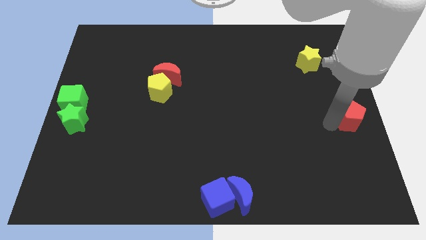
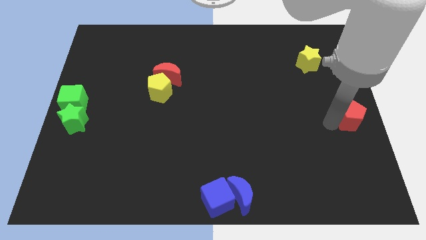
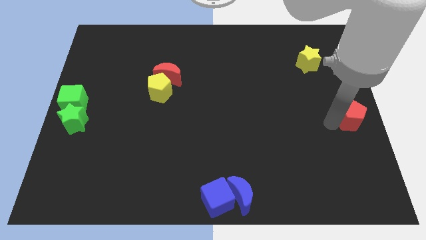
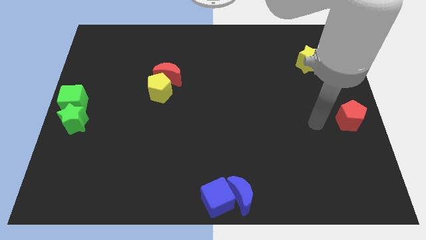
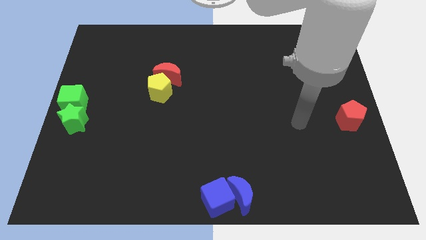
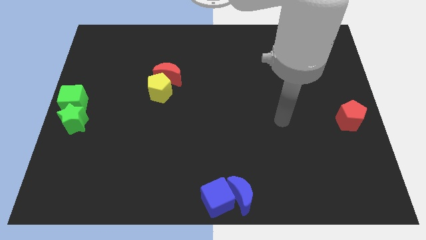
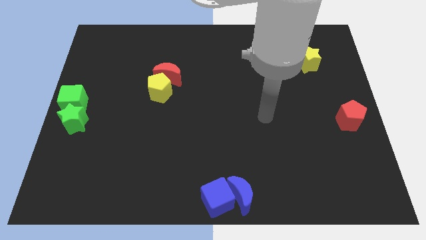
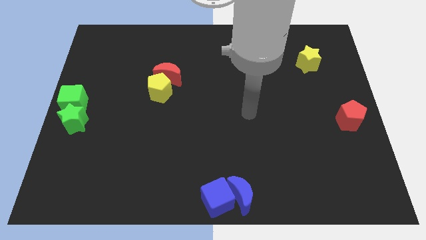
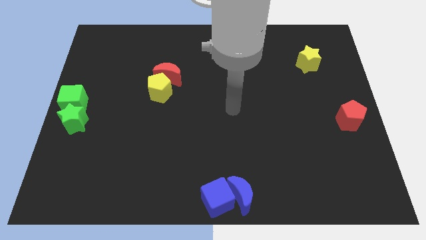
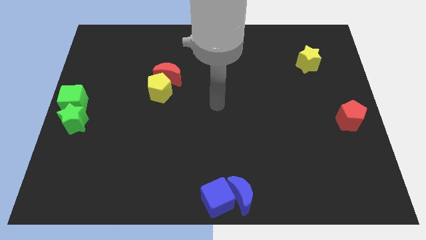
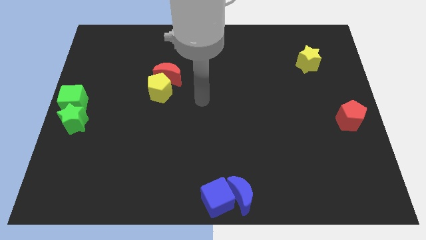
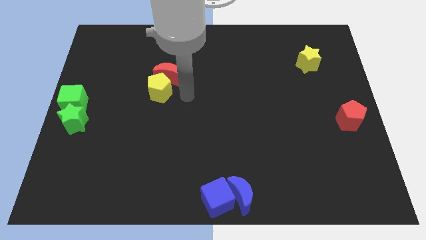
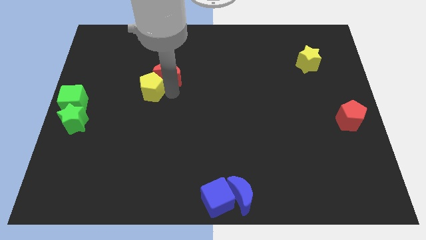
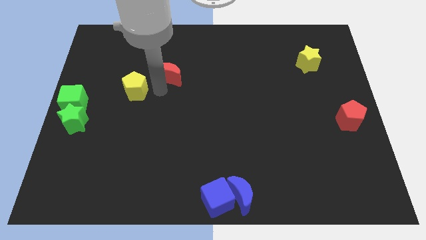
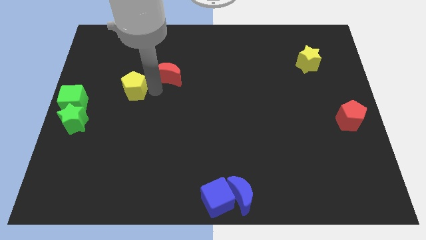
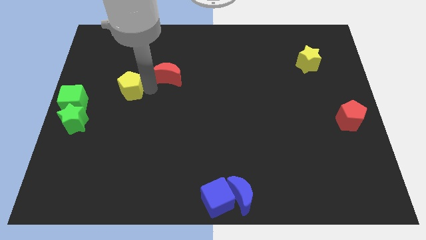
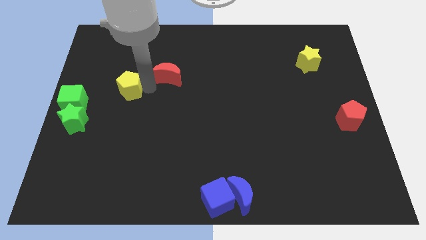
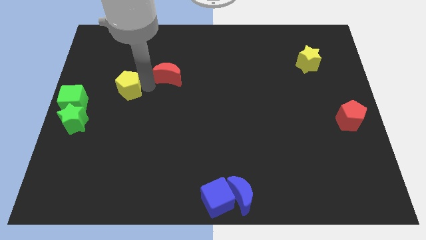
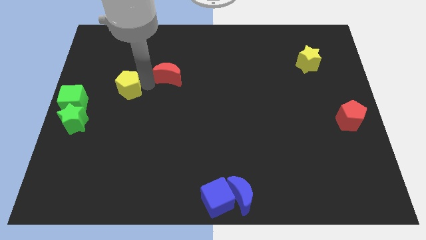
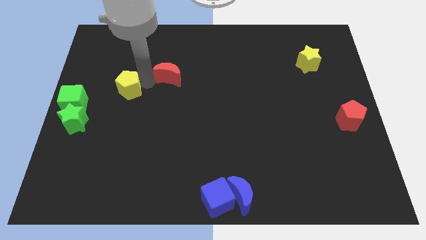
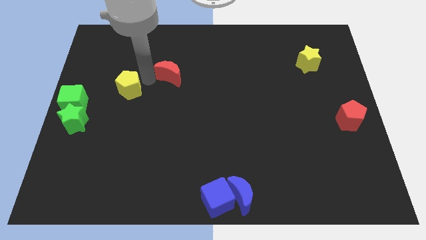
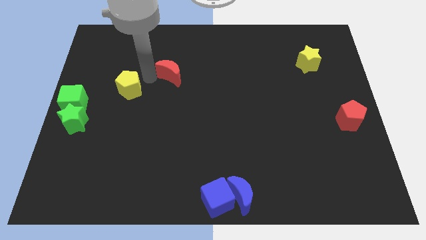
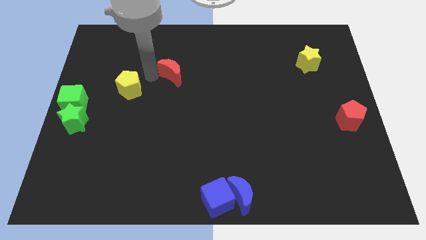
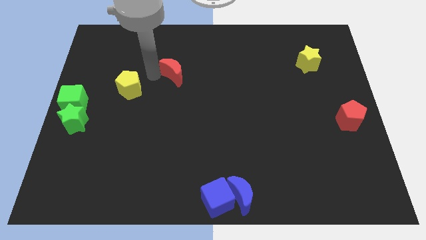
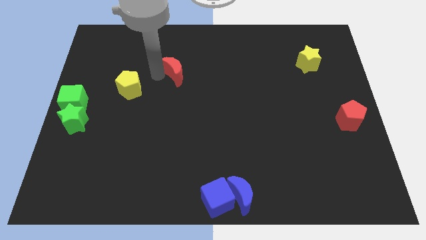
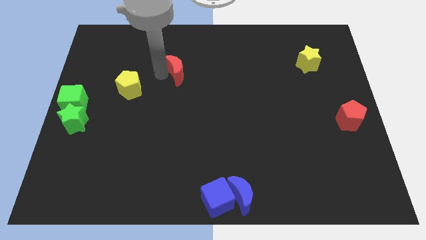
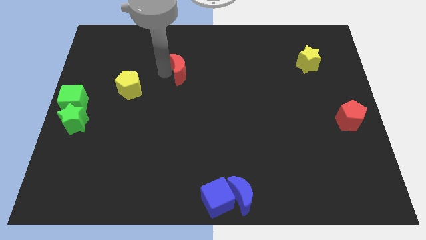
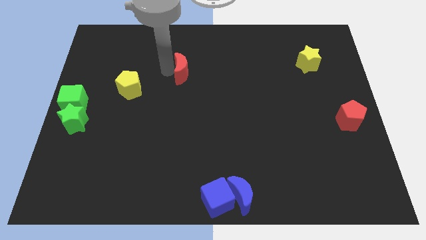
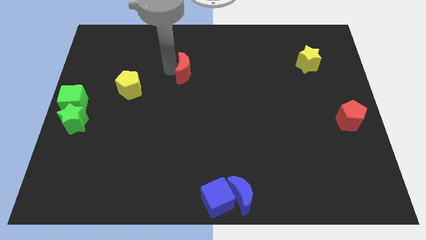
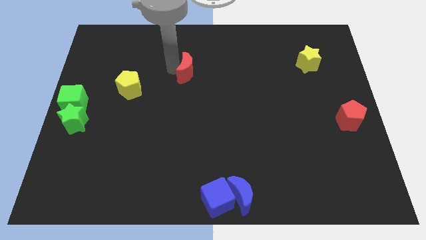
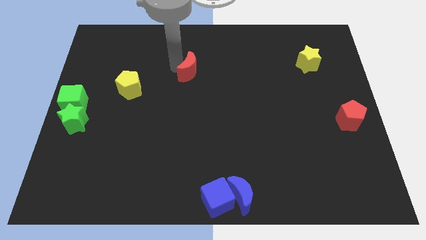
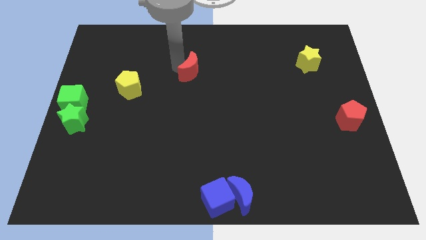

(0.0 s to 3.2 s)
separate the yellow pentagon and red crescent

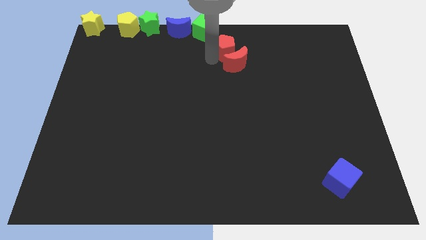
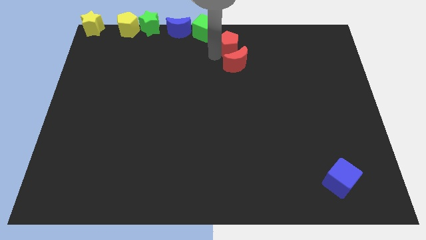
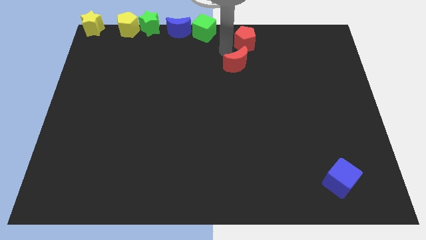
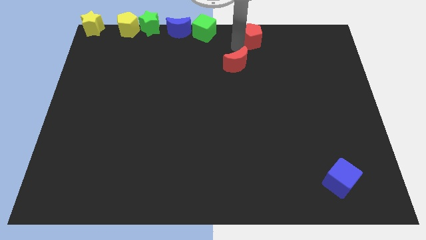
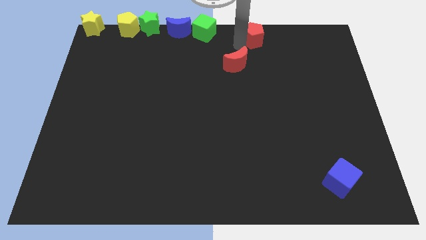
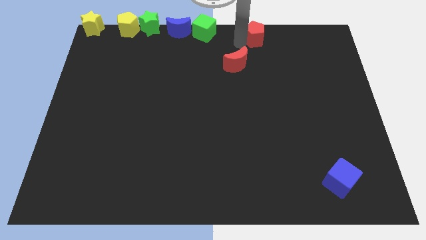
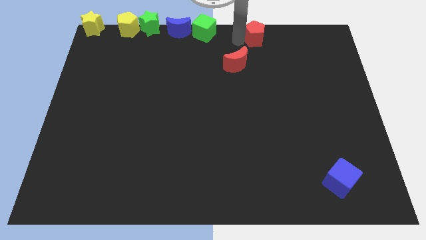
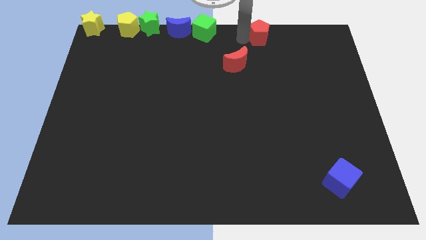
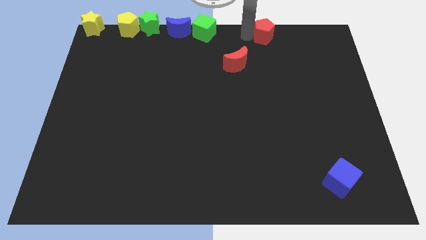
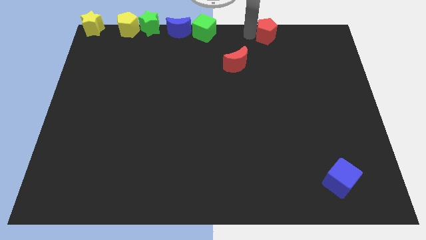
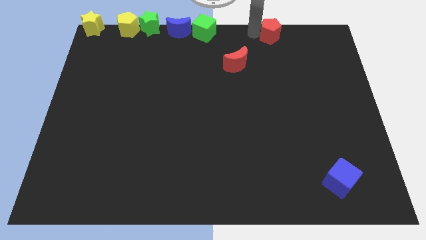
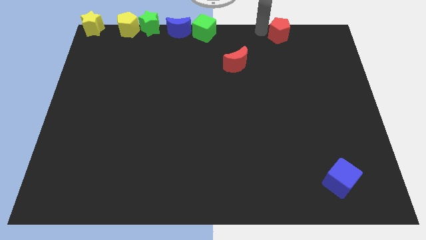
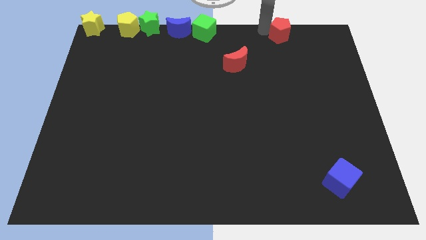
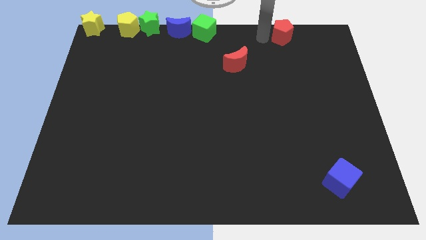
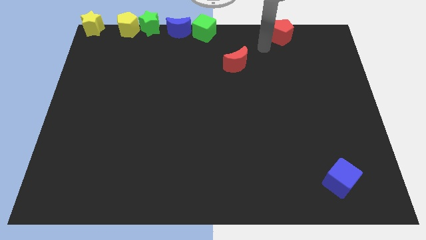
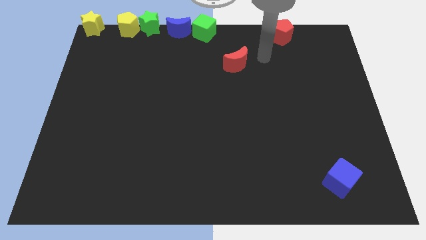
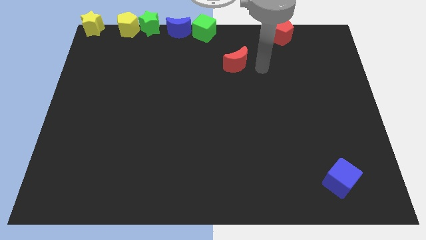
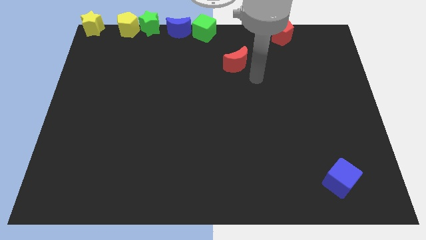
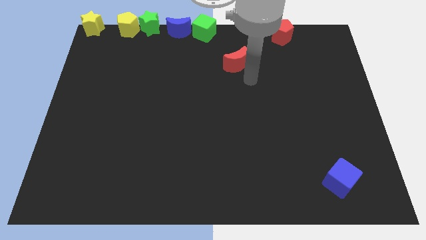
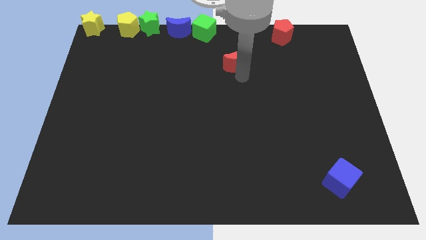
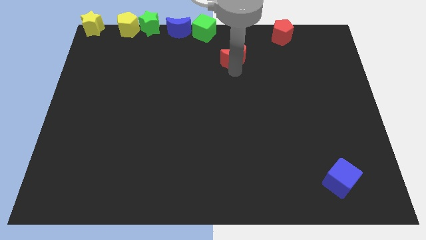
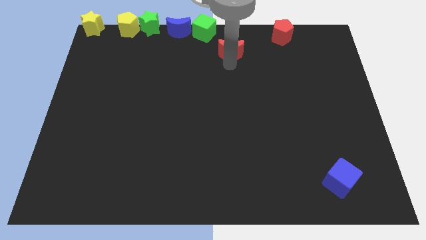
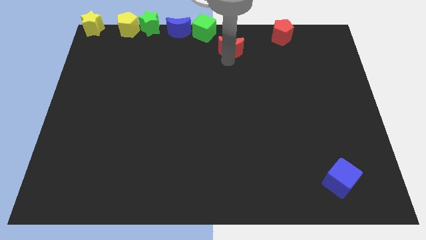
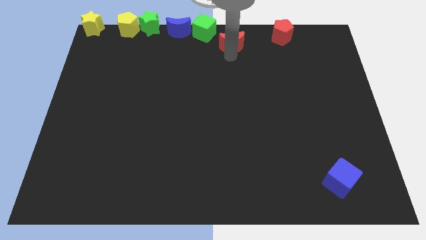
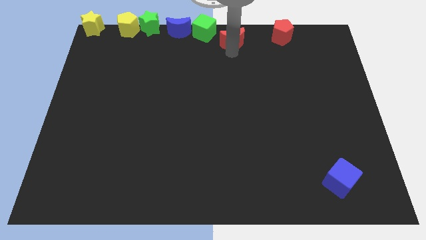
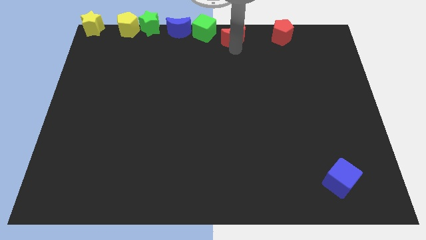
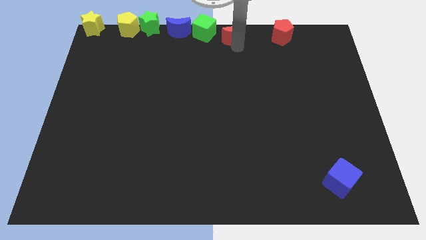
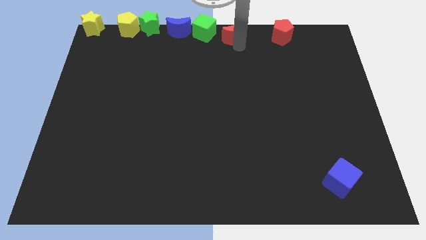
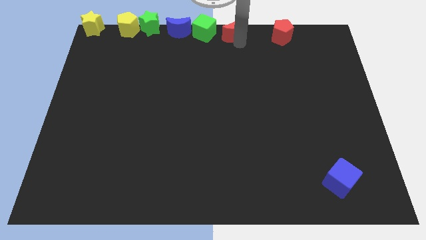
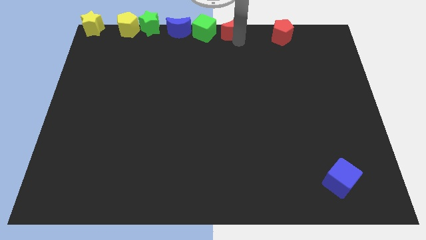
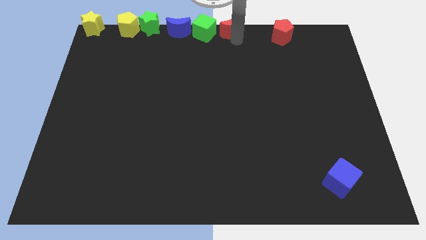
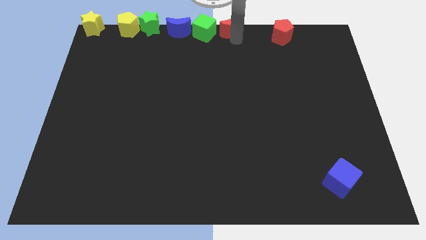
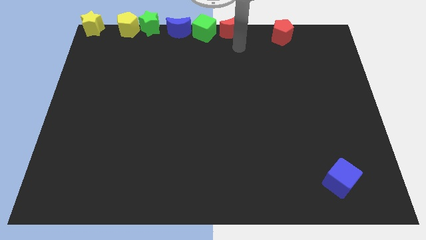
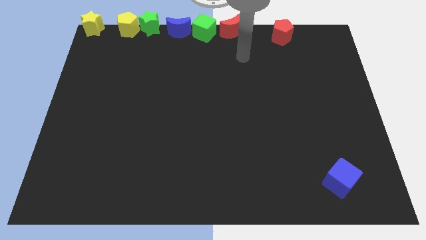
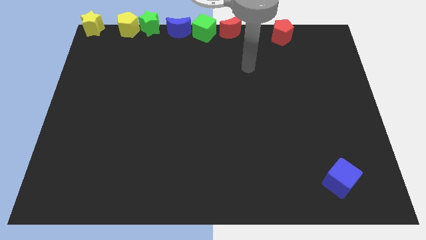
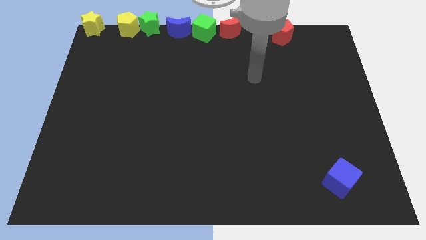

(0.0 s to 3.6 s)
move the red moon and red pentagon parallel to each other

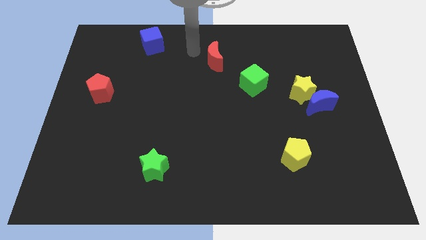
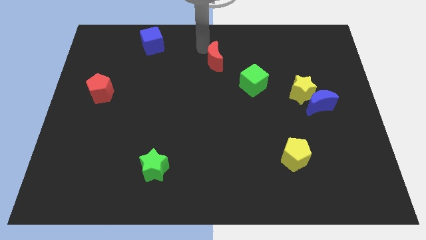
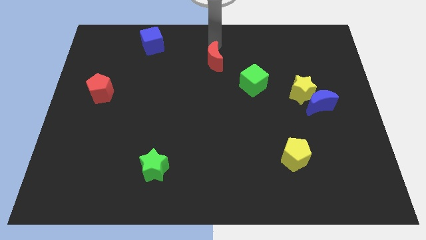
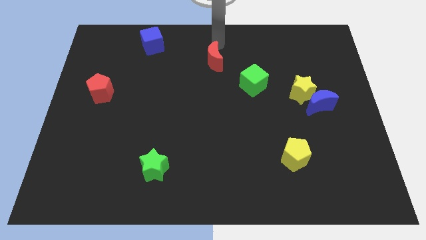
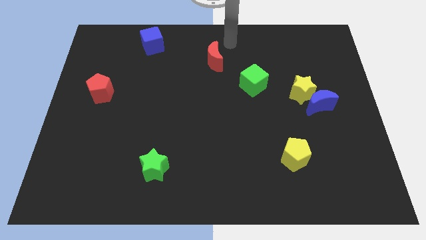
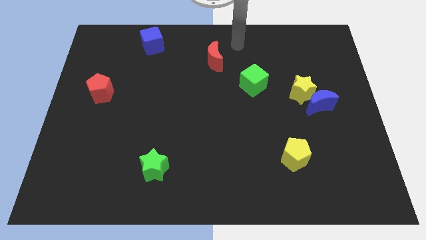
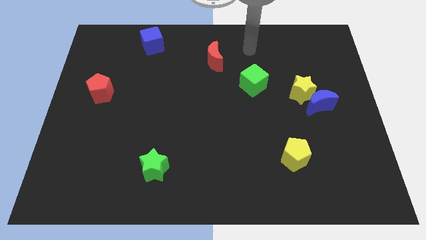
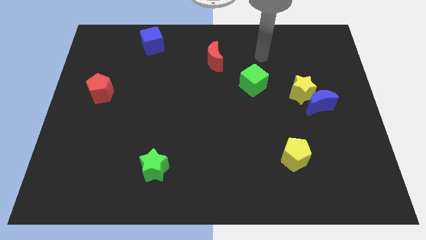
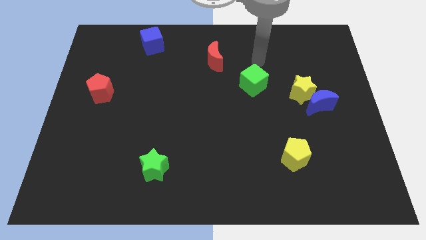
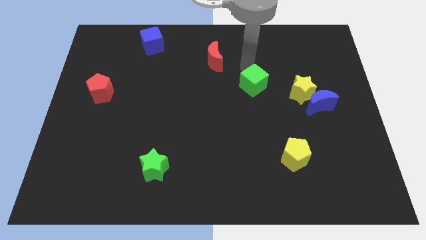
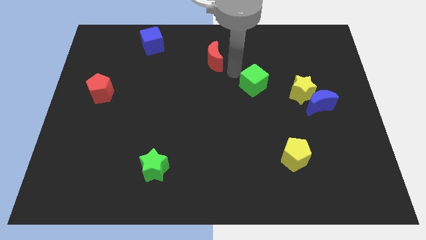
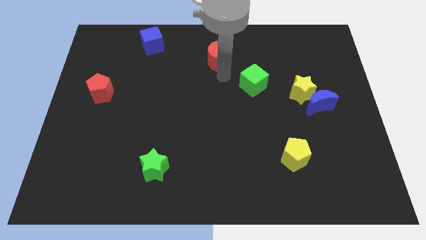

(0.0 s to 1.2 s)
move arm right below the red moon

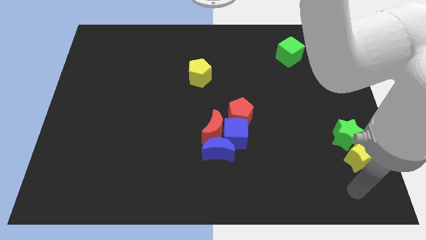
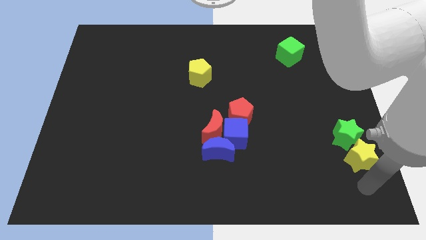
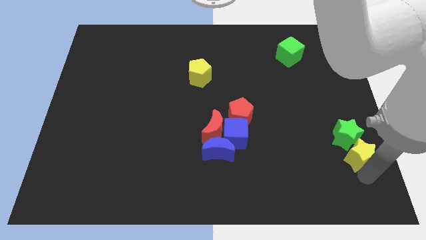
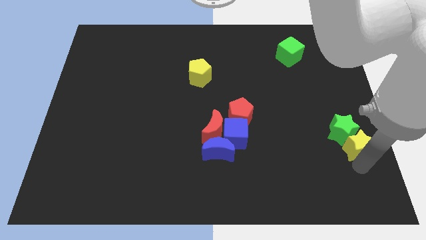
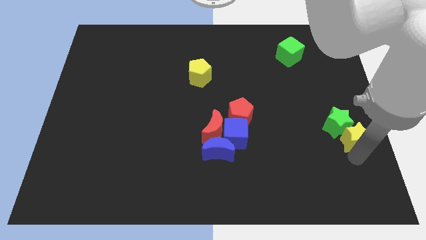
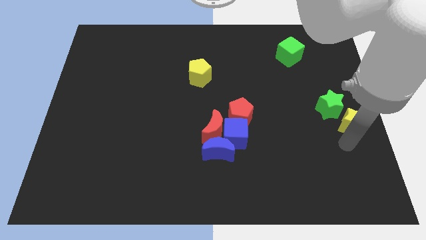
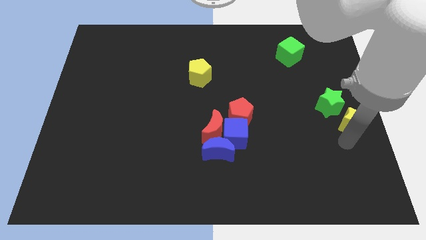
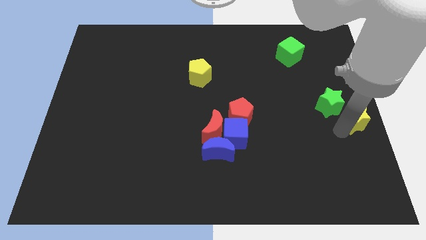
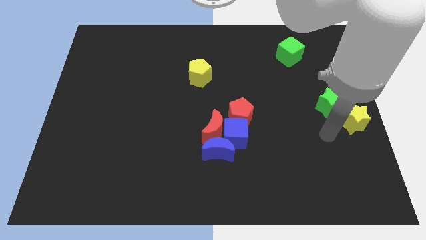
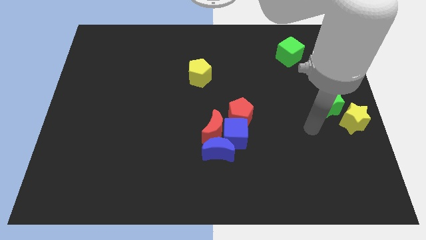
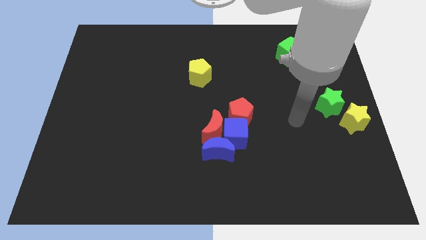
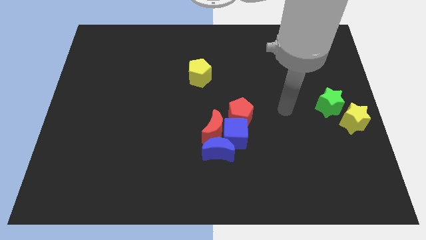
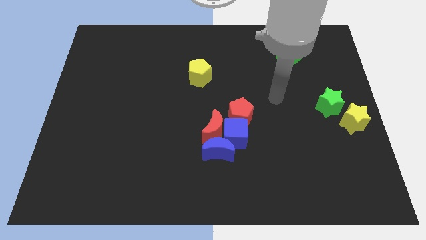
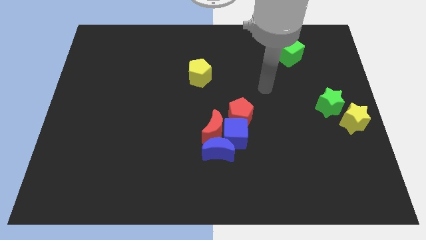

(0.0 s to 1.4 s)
push the green star and yellow star together to the right center of the board
